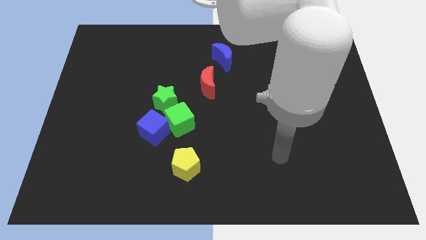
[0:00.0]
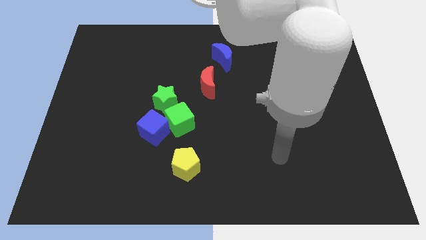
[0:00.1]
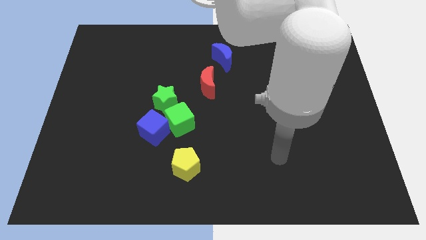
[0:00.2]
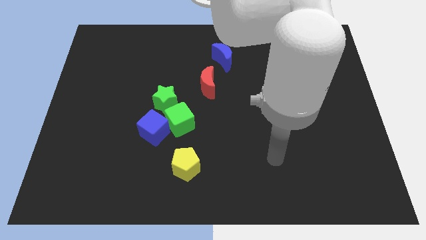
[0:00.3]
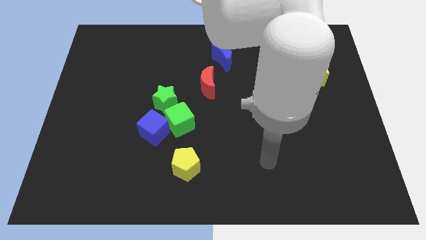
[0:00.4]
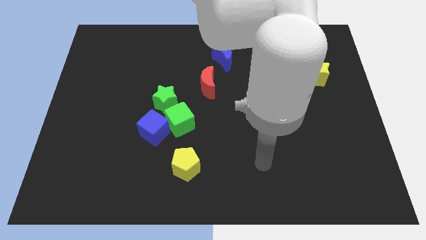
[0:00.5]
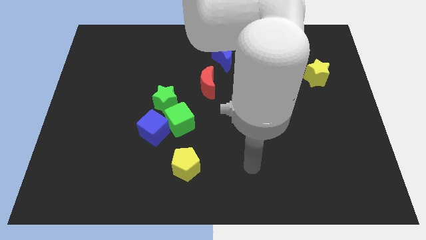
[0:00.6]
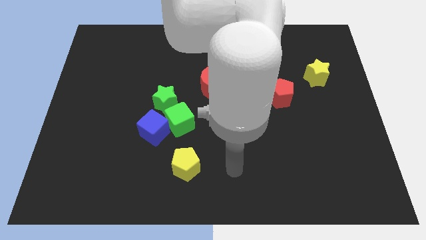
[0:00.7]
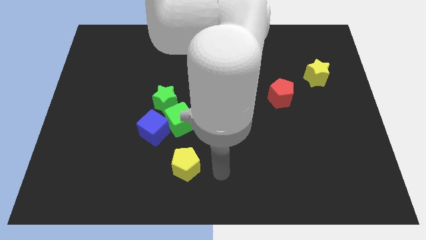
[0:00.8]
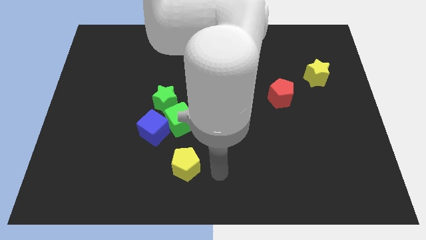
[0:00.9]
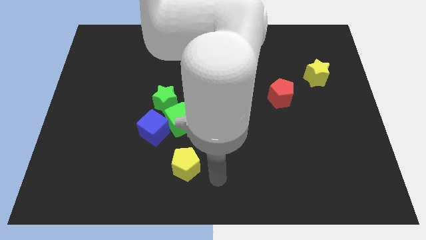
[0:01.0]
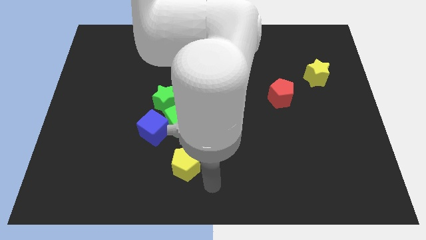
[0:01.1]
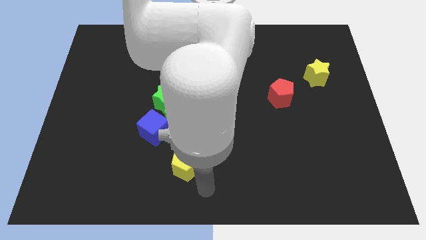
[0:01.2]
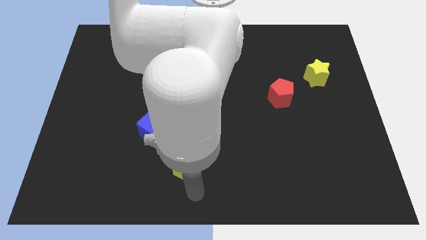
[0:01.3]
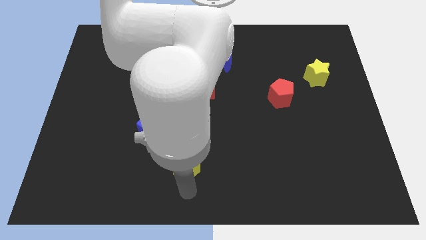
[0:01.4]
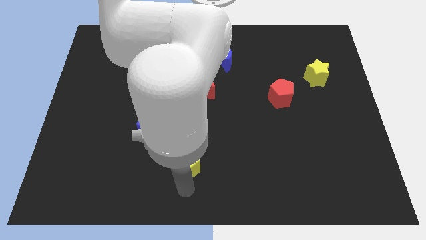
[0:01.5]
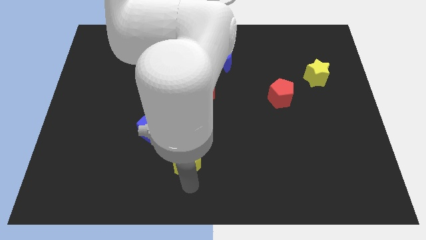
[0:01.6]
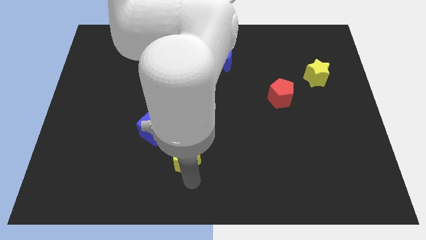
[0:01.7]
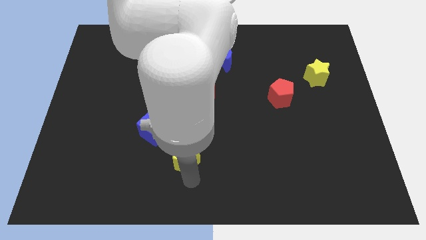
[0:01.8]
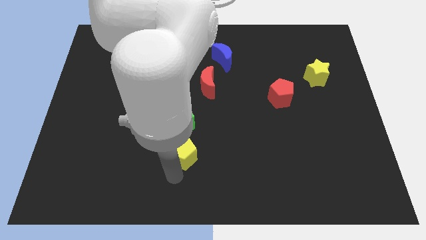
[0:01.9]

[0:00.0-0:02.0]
push the yellow pentagon

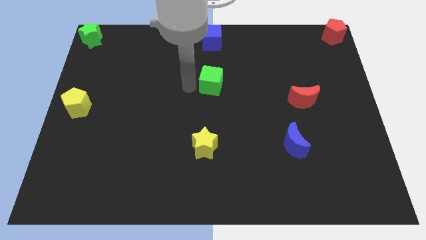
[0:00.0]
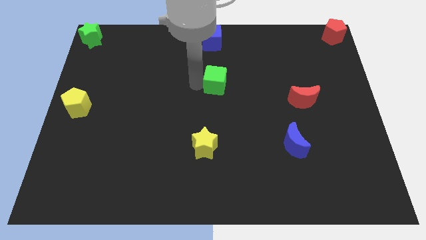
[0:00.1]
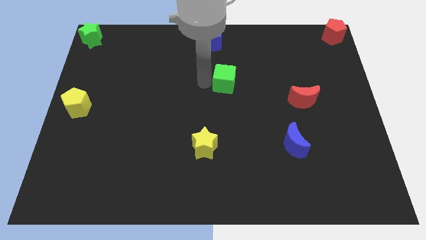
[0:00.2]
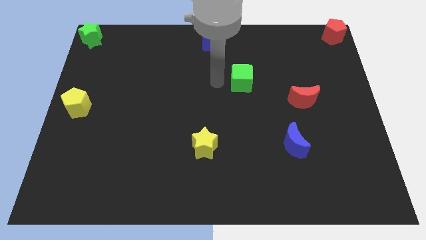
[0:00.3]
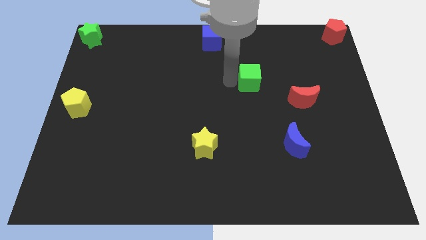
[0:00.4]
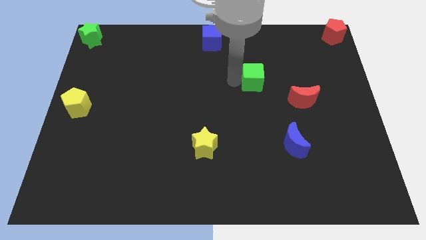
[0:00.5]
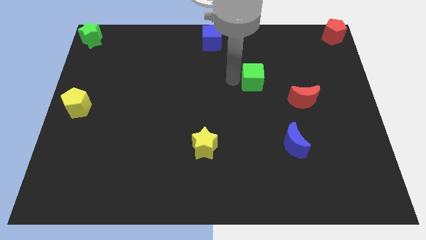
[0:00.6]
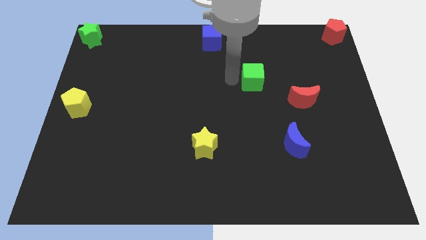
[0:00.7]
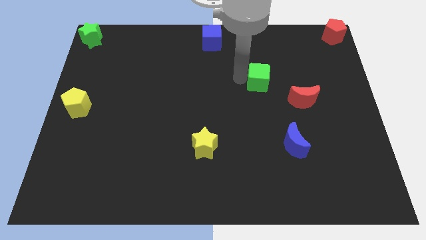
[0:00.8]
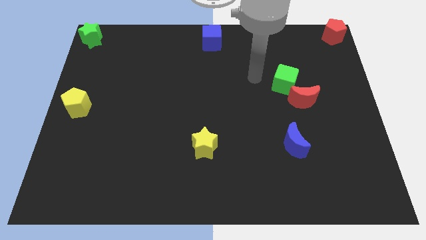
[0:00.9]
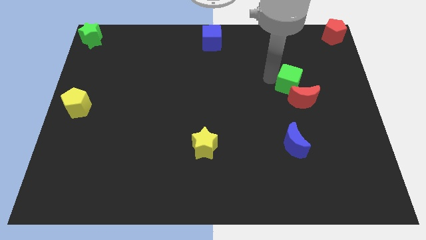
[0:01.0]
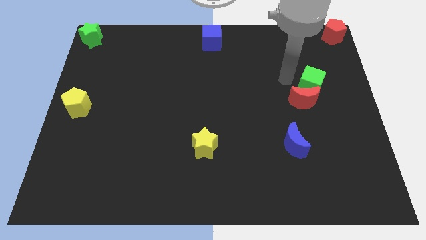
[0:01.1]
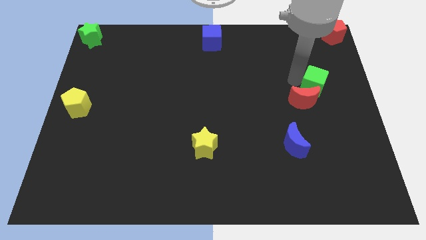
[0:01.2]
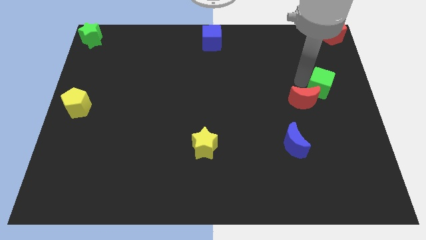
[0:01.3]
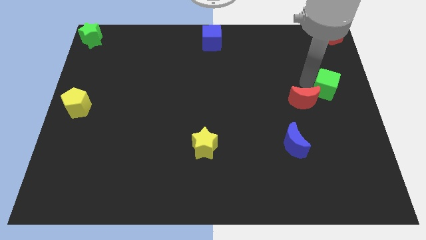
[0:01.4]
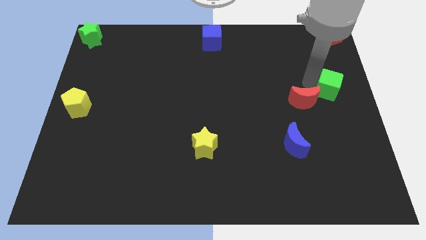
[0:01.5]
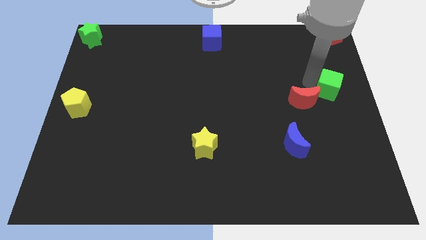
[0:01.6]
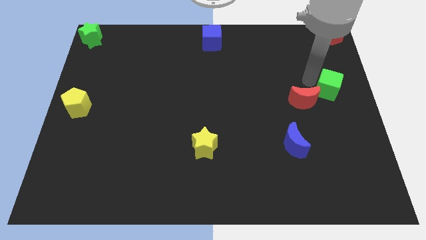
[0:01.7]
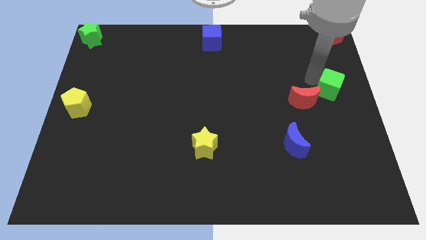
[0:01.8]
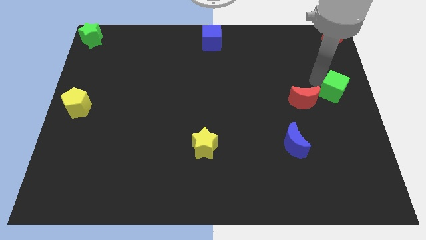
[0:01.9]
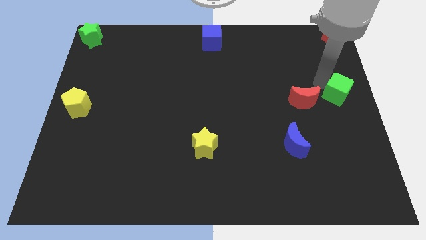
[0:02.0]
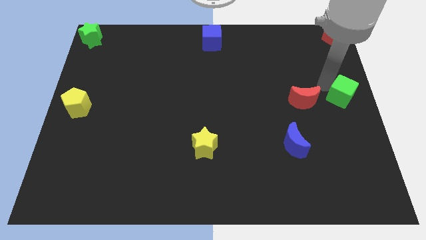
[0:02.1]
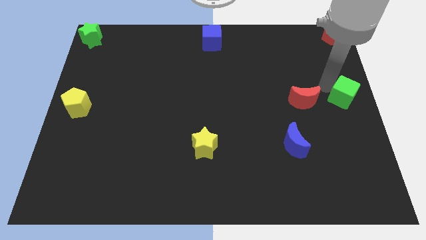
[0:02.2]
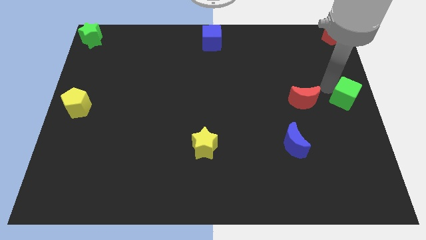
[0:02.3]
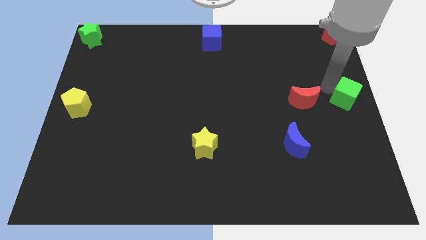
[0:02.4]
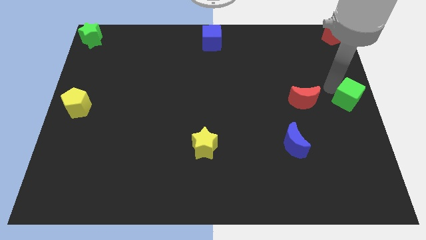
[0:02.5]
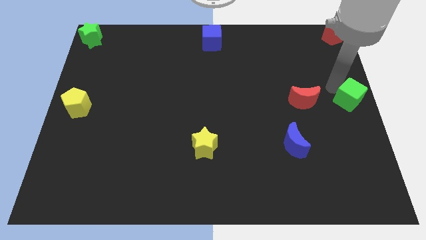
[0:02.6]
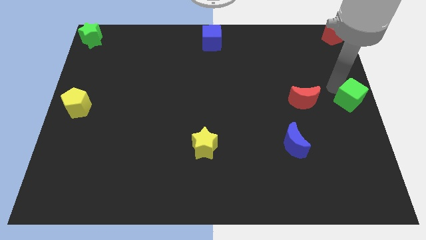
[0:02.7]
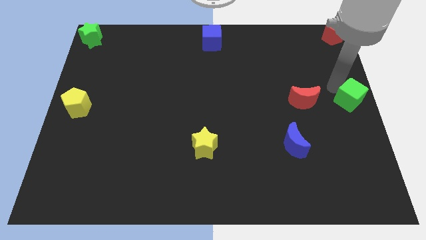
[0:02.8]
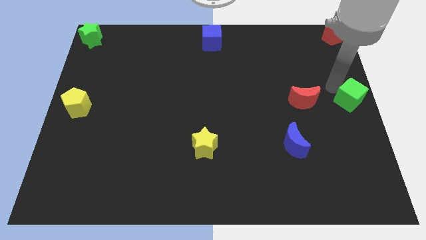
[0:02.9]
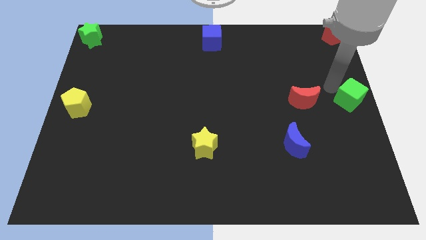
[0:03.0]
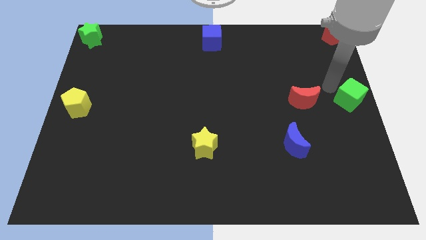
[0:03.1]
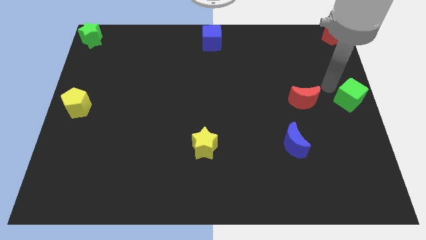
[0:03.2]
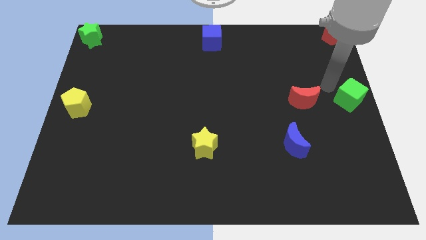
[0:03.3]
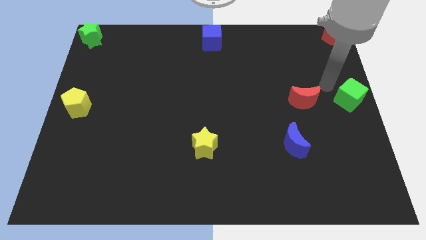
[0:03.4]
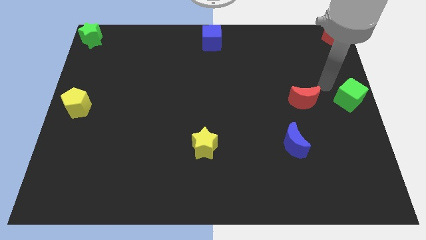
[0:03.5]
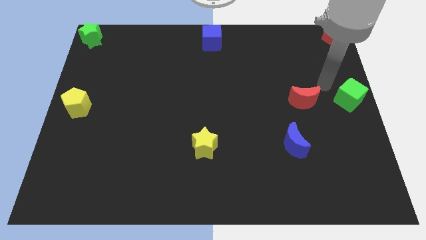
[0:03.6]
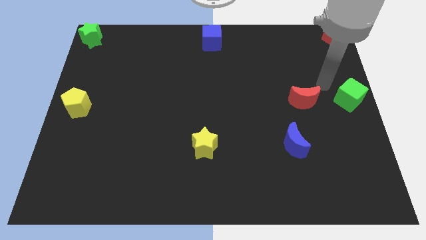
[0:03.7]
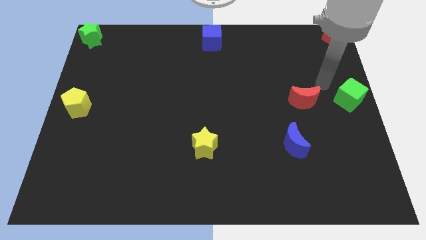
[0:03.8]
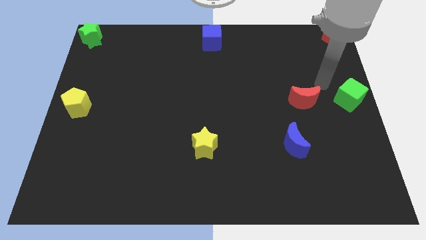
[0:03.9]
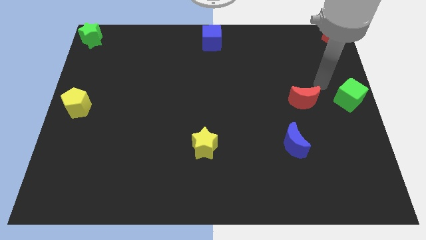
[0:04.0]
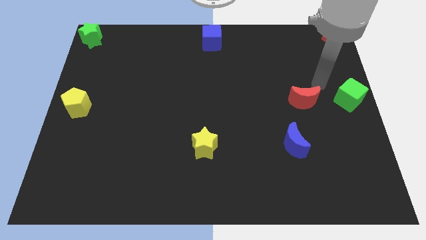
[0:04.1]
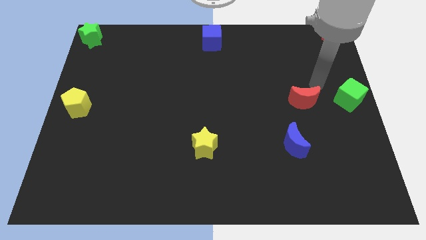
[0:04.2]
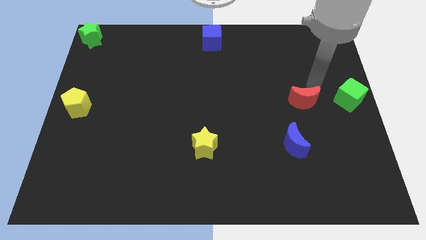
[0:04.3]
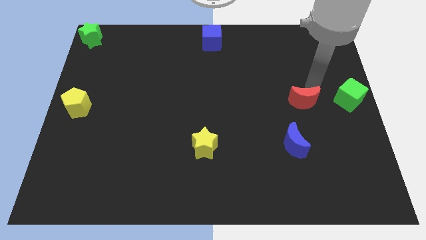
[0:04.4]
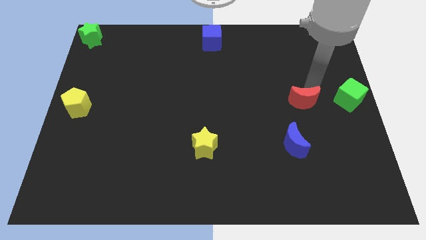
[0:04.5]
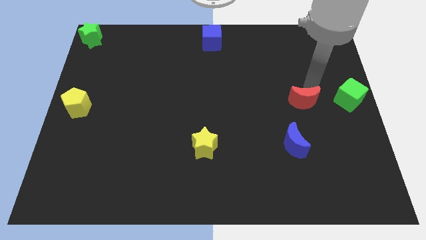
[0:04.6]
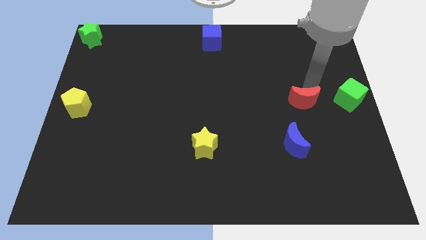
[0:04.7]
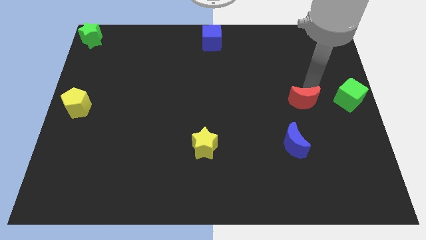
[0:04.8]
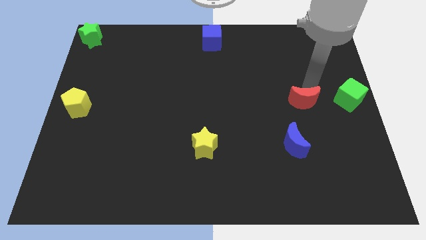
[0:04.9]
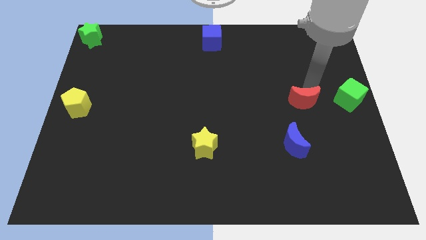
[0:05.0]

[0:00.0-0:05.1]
move the green to the left center

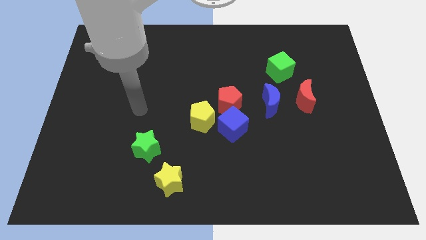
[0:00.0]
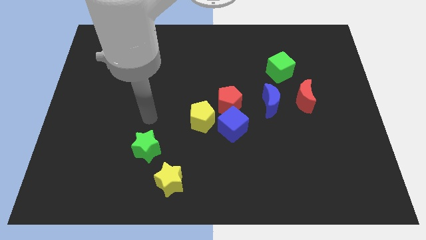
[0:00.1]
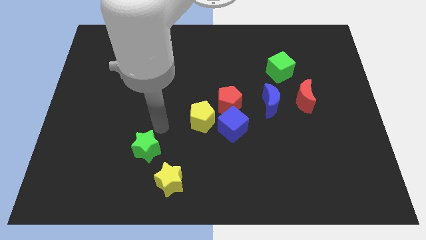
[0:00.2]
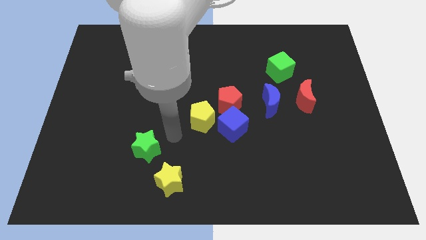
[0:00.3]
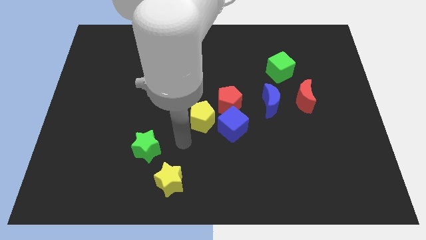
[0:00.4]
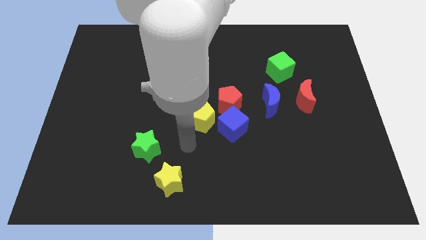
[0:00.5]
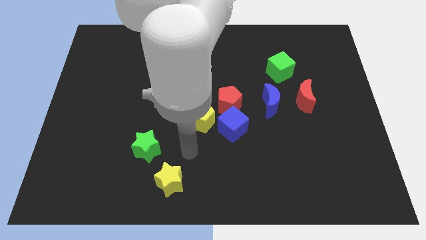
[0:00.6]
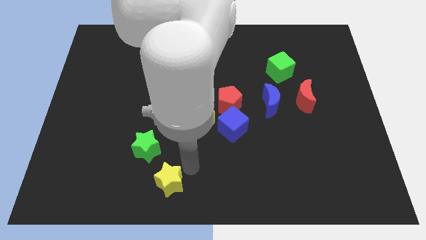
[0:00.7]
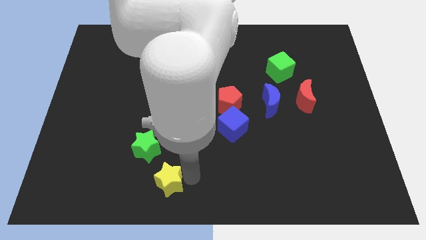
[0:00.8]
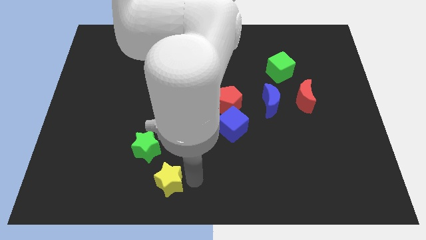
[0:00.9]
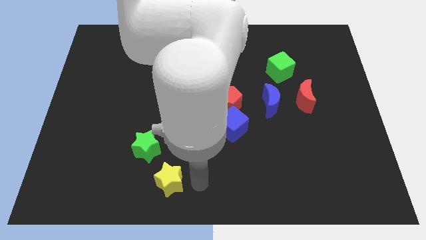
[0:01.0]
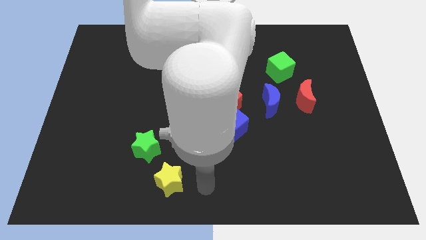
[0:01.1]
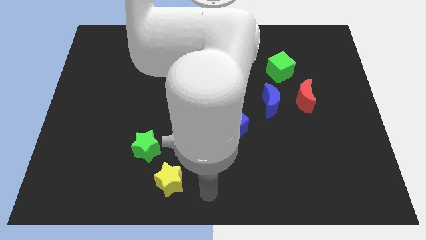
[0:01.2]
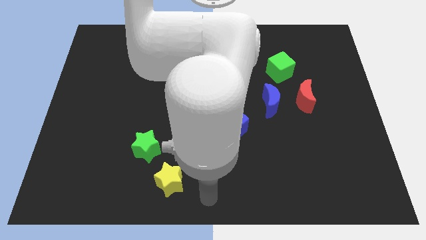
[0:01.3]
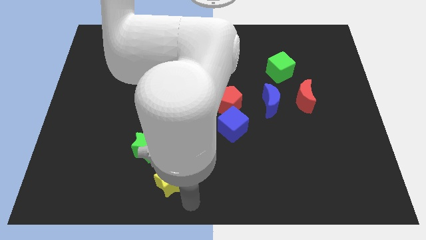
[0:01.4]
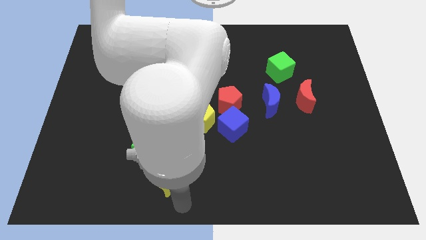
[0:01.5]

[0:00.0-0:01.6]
put your hand vertically below the yellow star

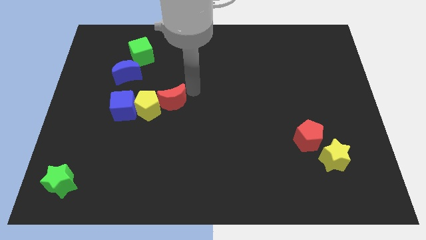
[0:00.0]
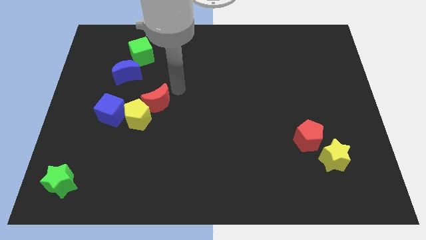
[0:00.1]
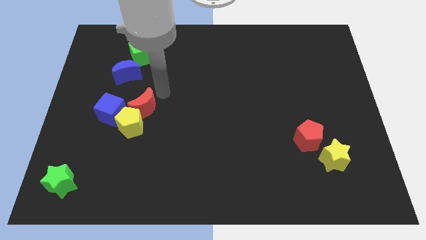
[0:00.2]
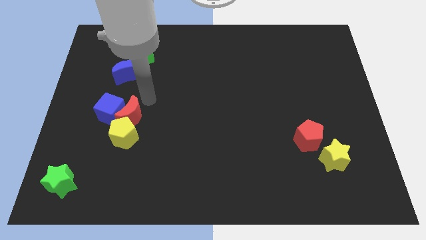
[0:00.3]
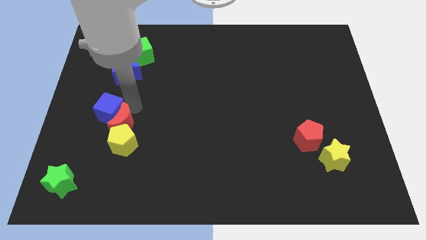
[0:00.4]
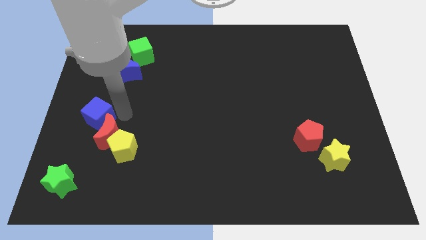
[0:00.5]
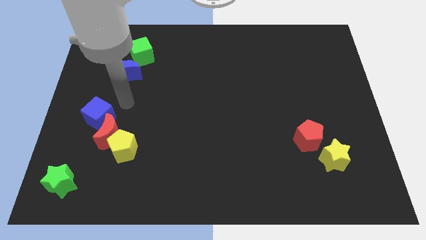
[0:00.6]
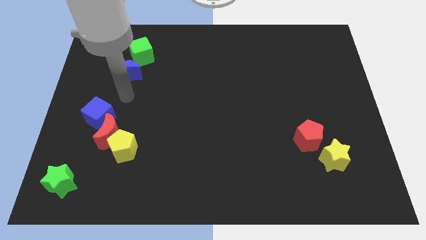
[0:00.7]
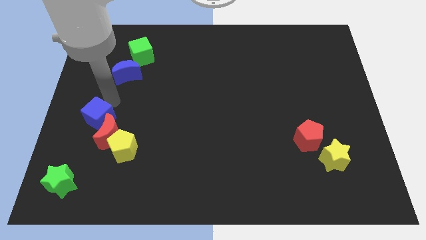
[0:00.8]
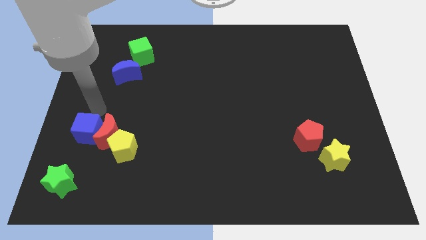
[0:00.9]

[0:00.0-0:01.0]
push the red moon in between the yellow pentagon and blue cube
